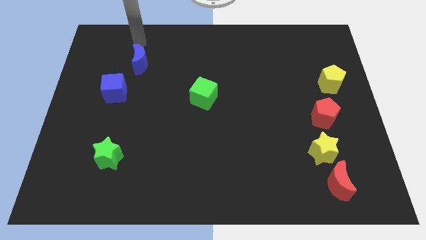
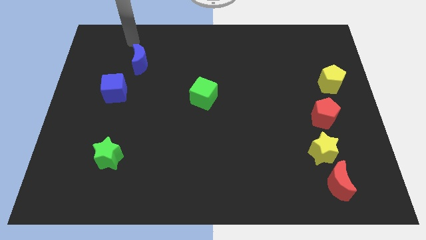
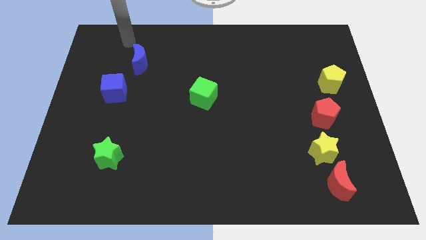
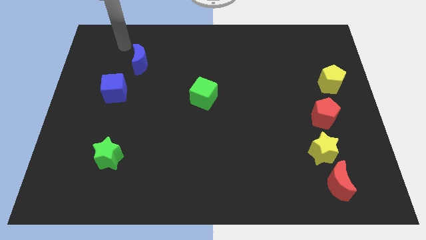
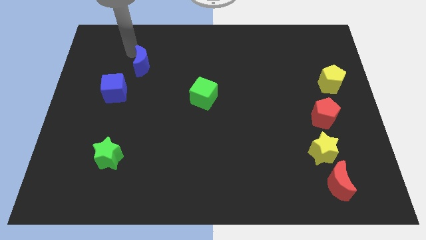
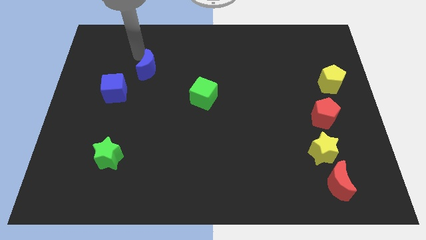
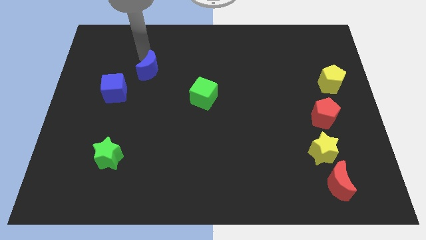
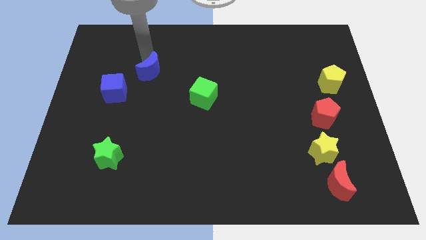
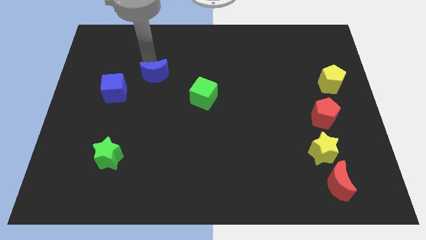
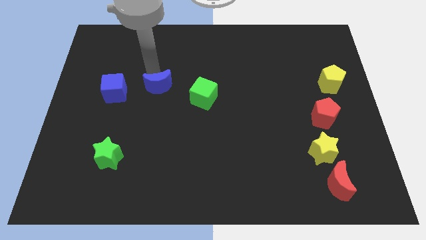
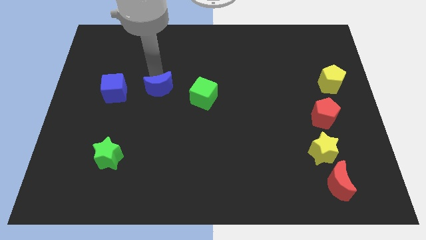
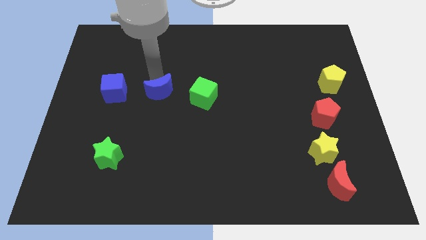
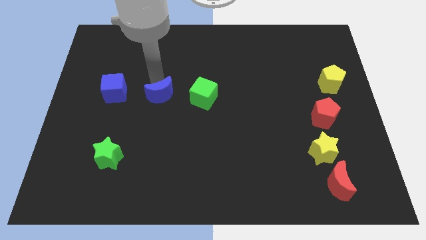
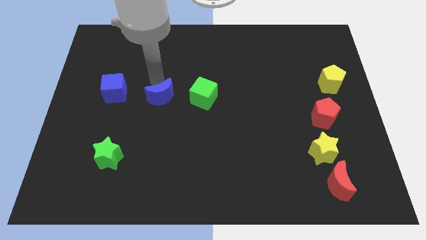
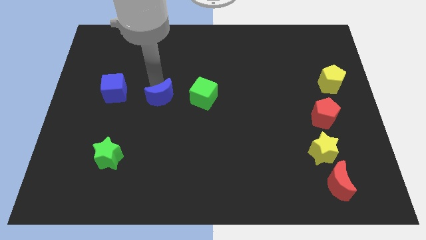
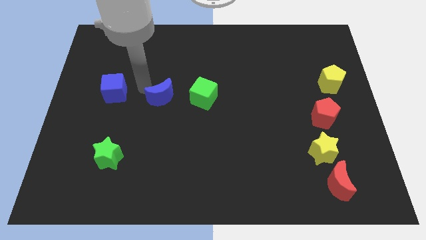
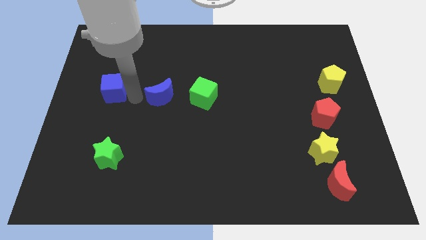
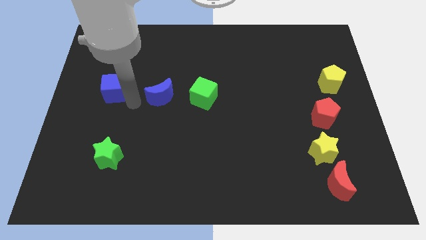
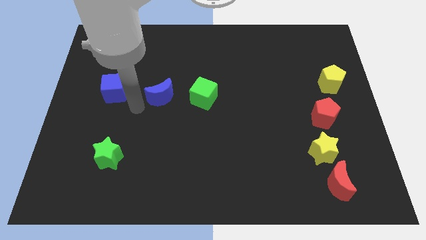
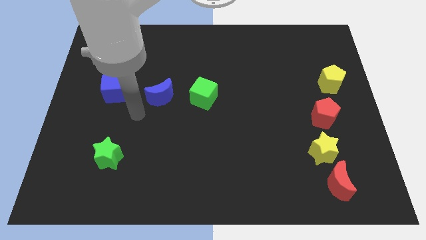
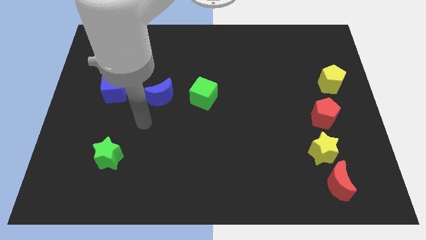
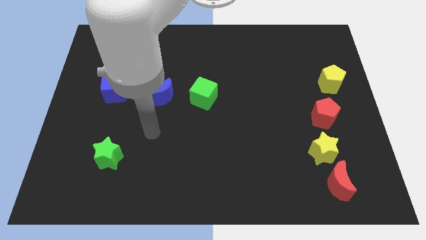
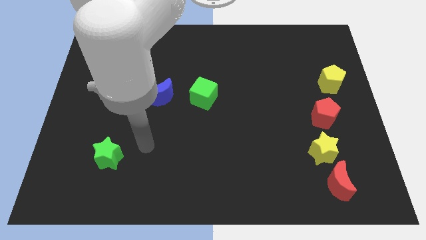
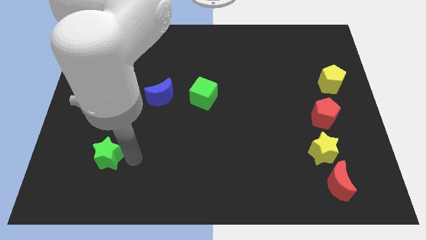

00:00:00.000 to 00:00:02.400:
push the blue crescent in between the blue cube and the green cube

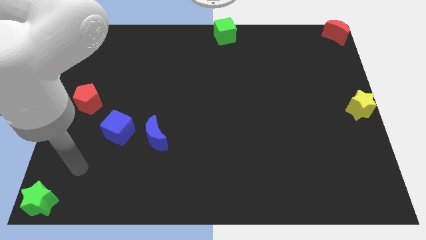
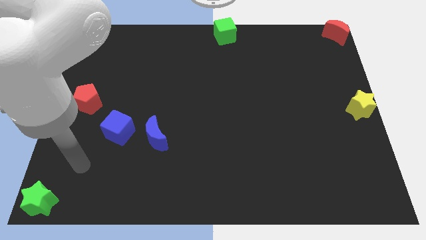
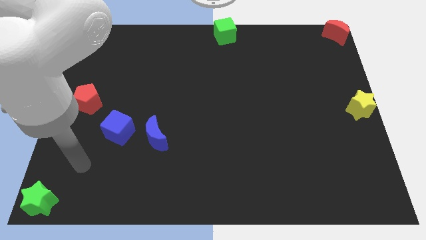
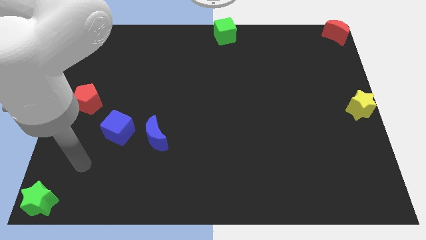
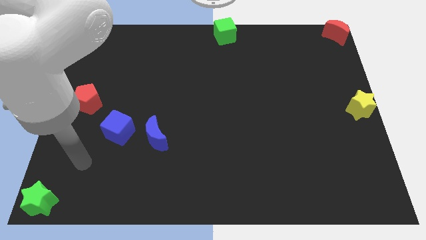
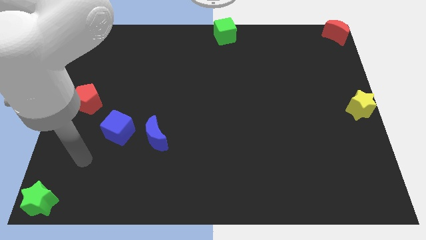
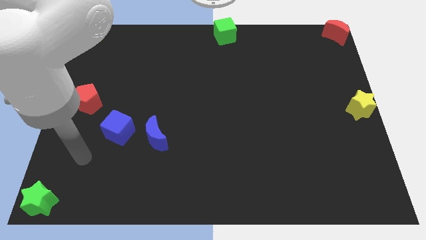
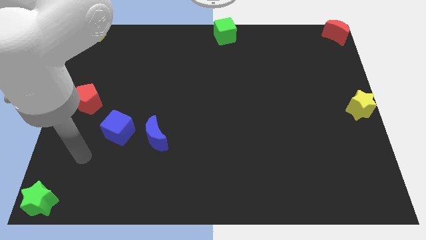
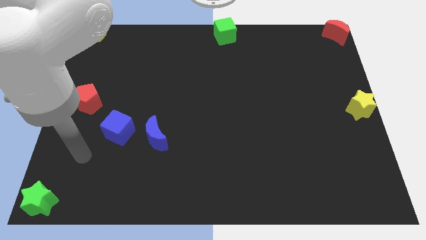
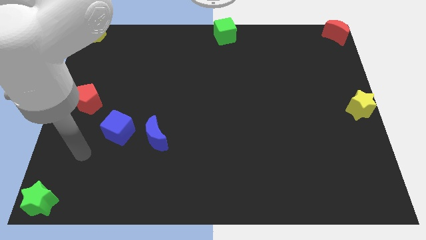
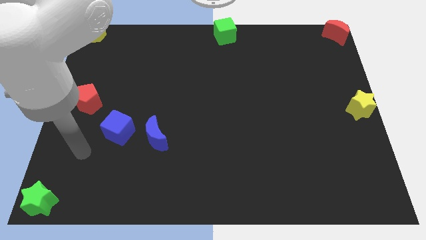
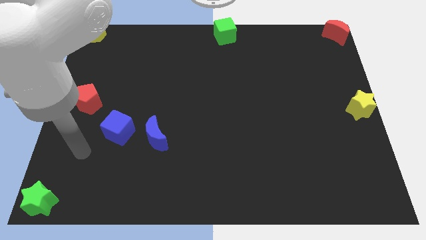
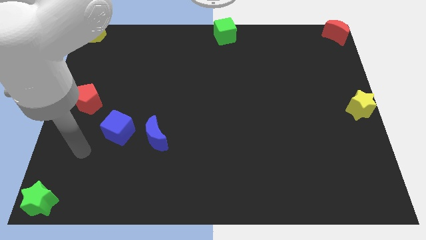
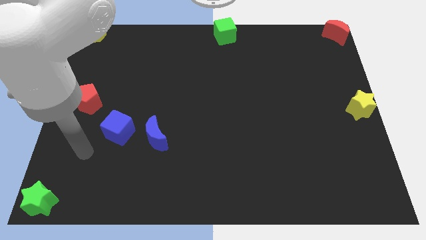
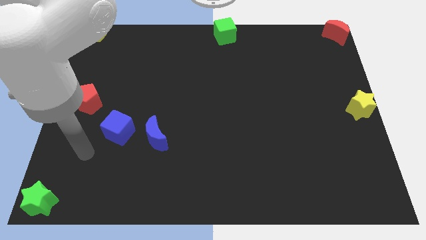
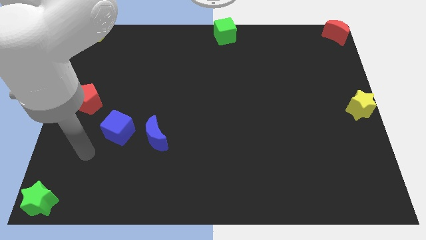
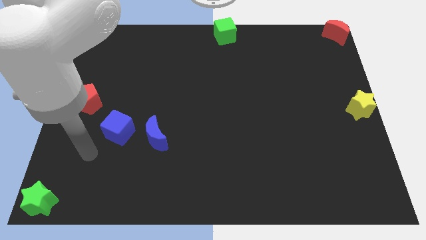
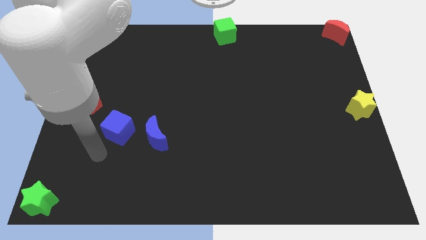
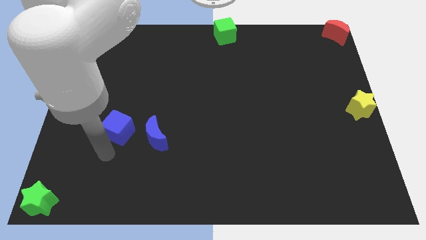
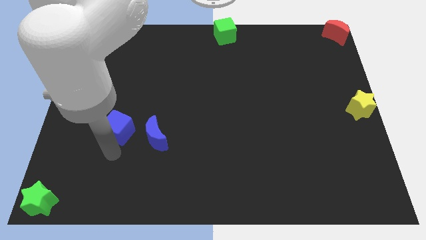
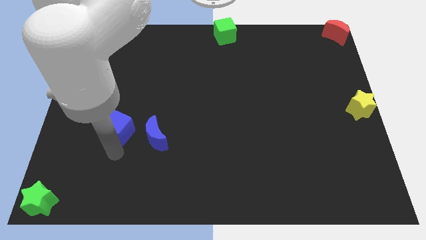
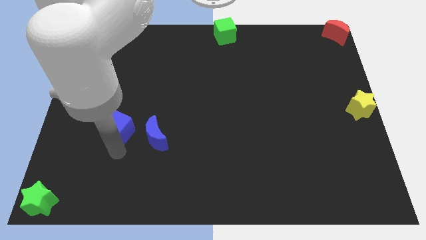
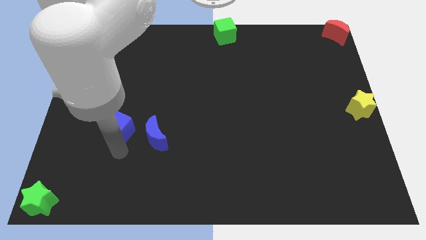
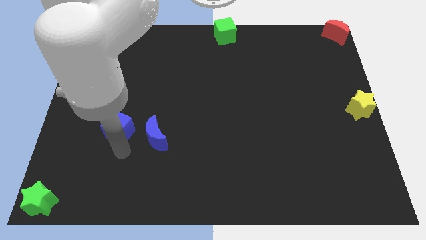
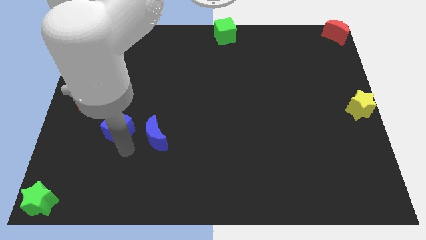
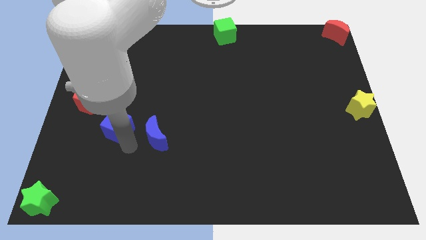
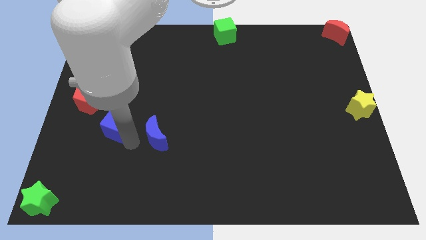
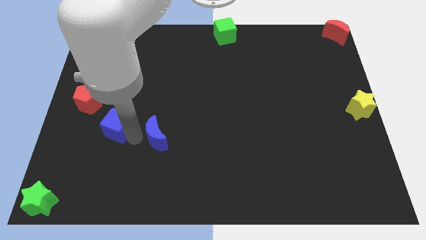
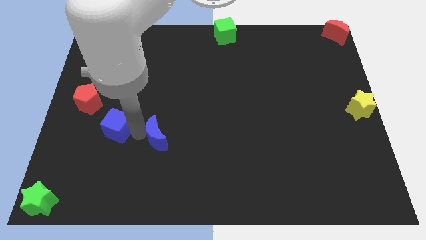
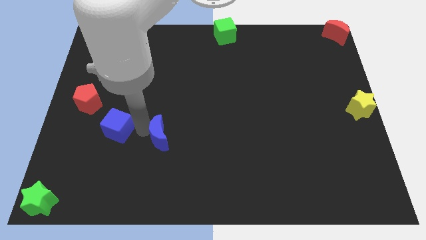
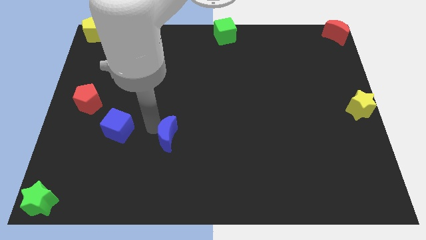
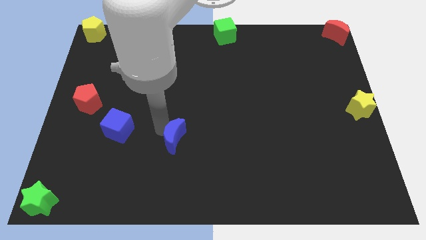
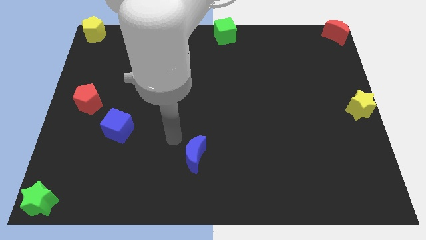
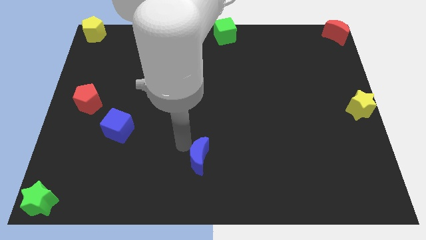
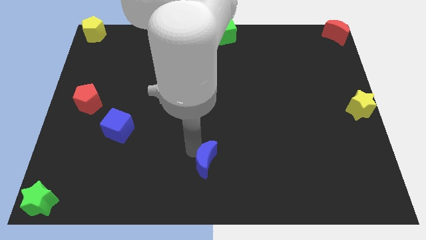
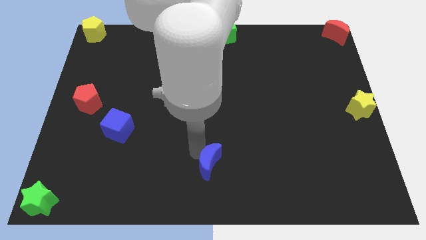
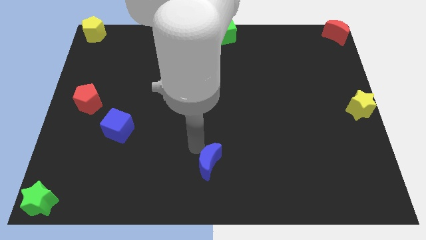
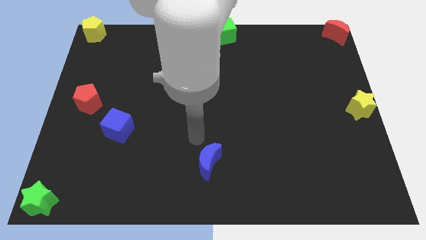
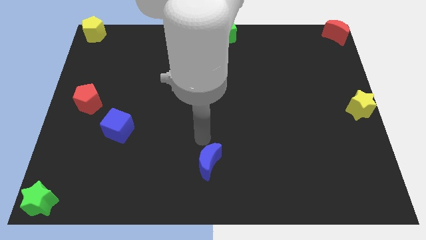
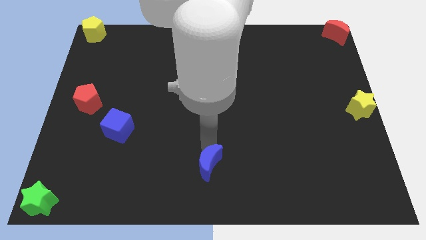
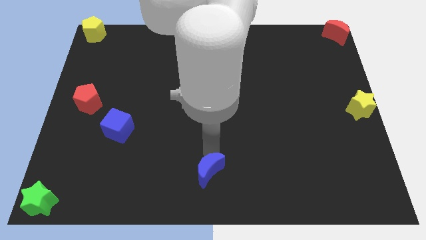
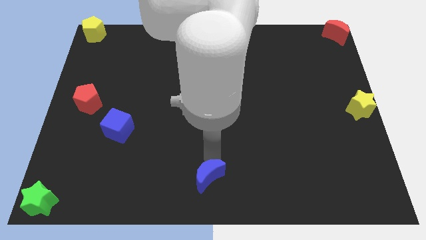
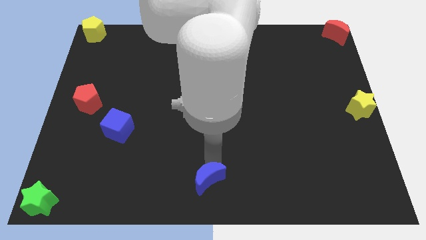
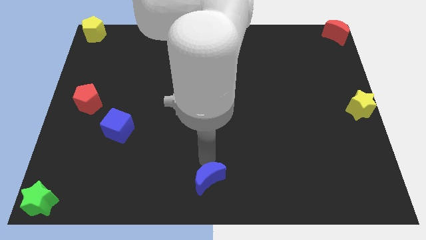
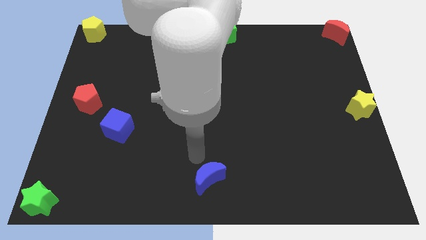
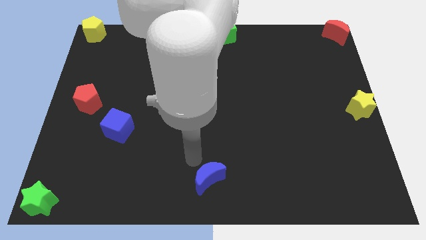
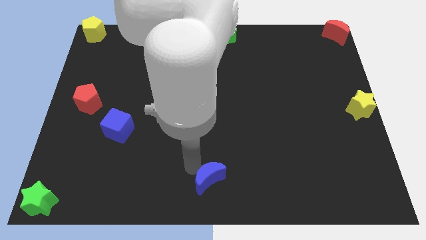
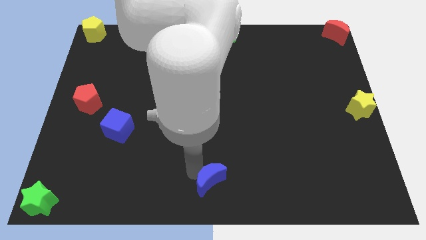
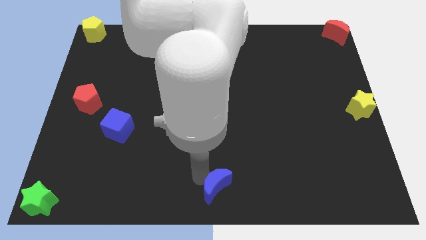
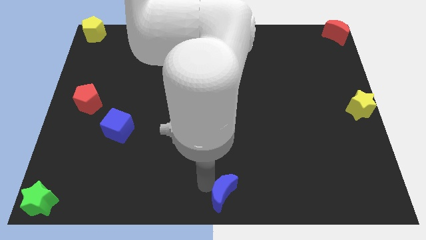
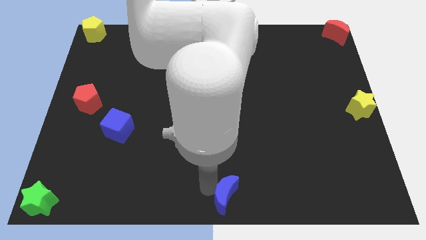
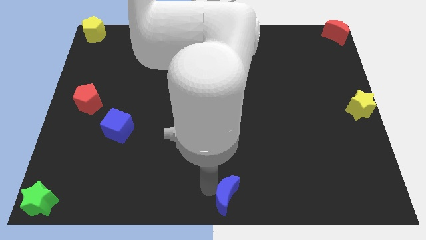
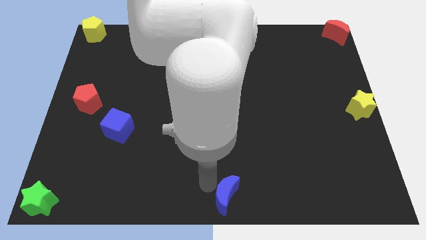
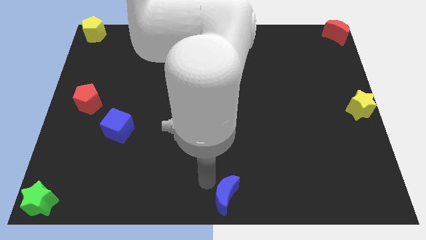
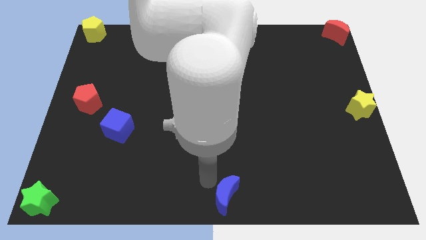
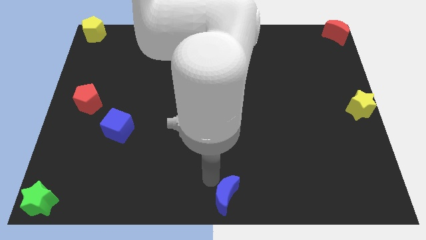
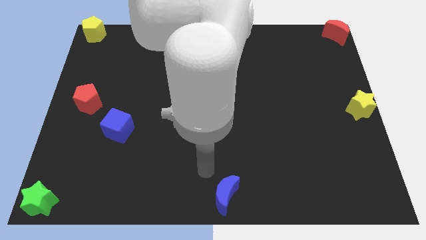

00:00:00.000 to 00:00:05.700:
place blue moon to the bottom center

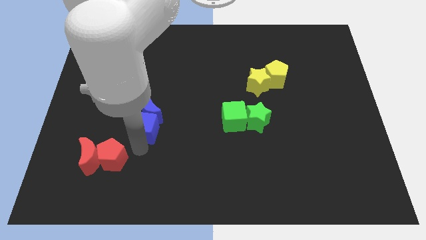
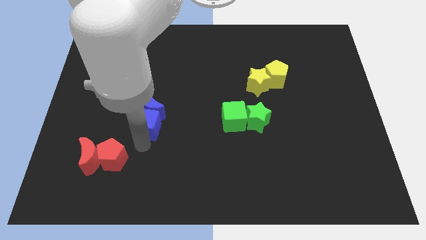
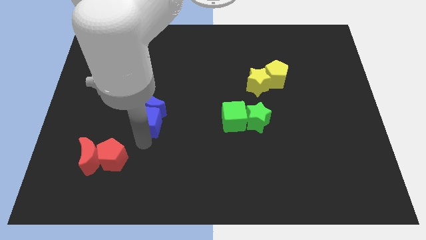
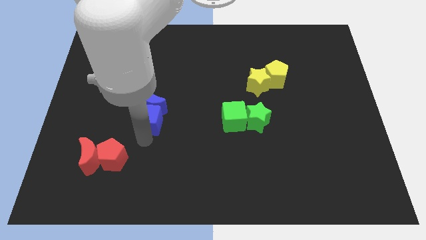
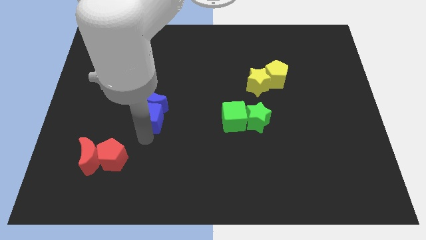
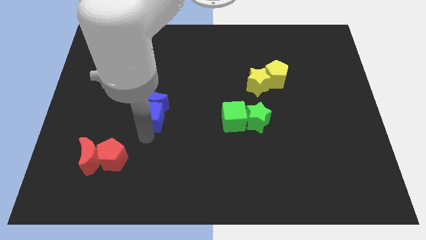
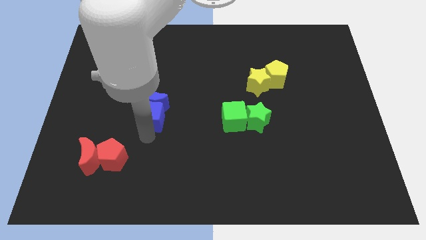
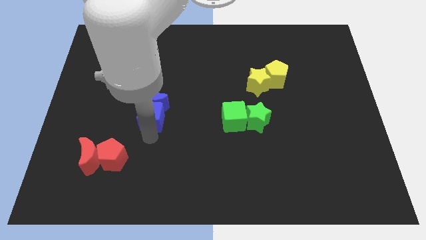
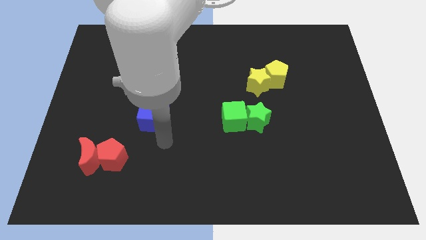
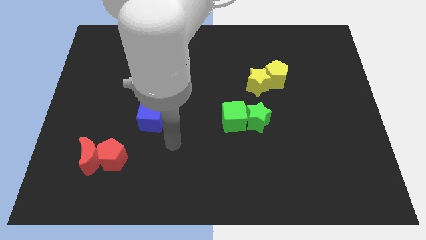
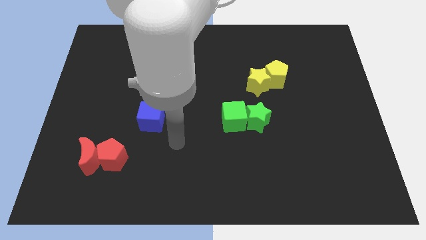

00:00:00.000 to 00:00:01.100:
push the blue crescent with the blue cube towards the center
